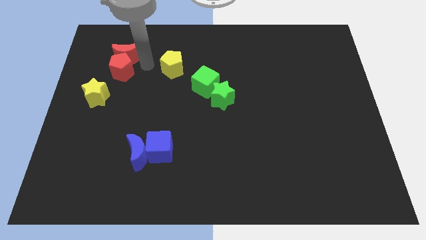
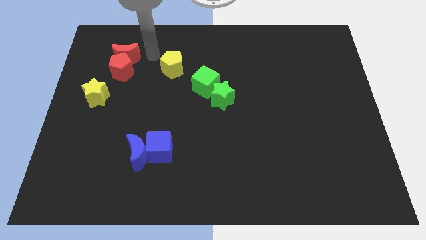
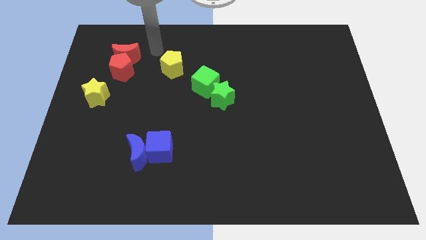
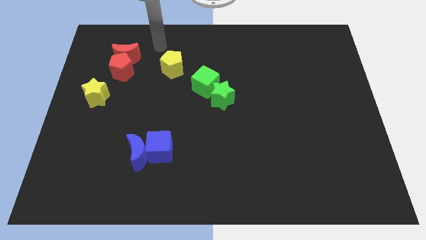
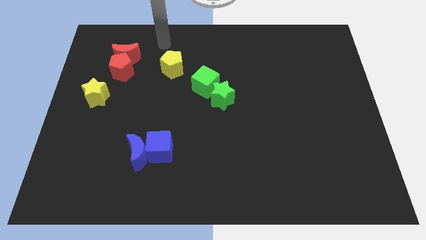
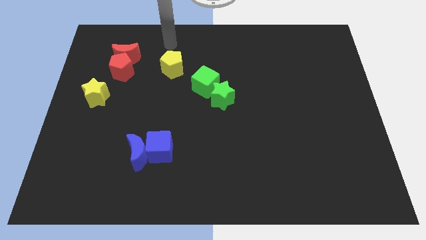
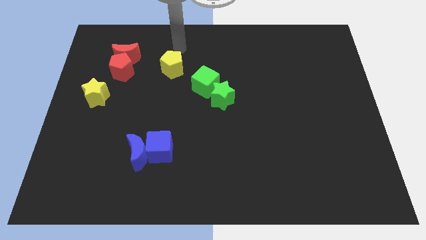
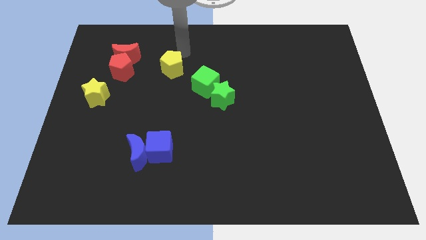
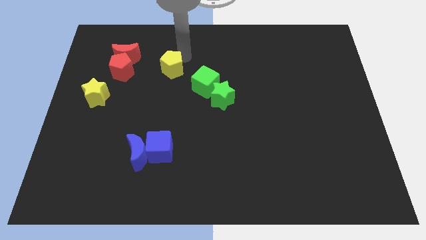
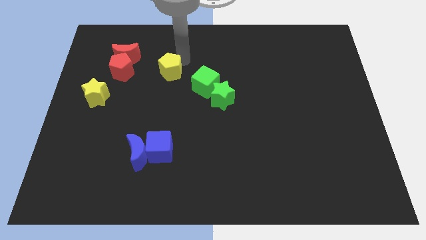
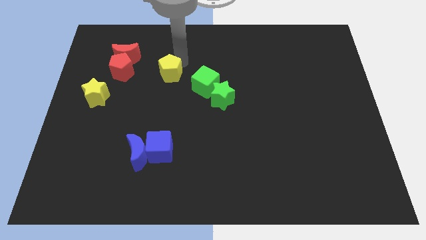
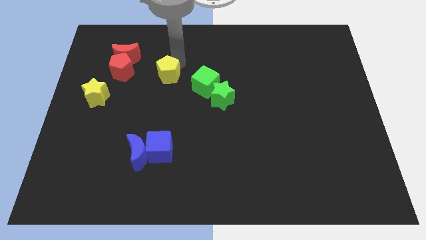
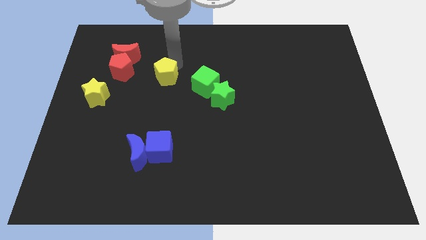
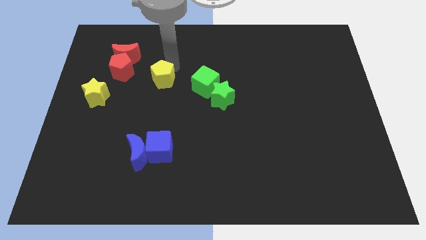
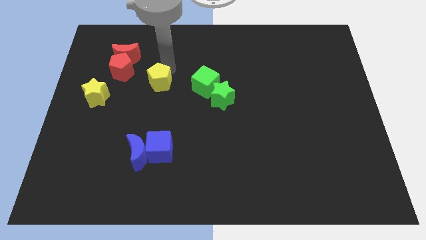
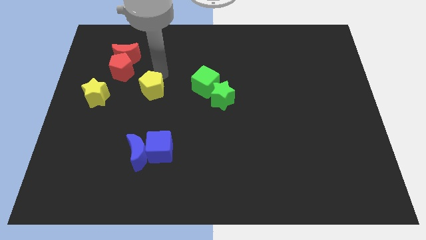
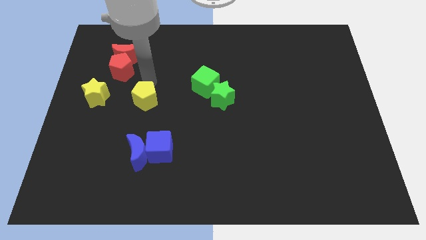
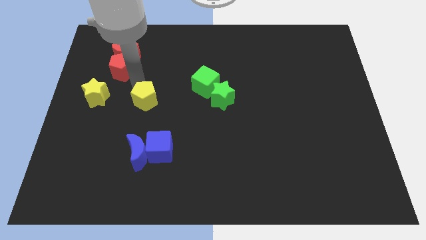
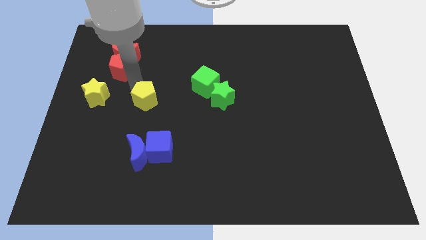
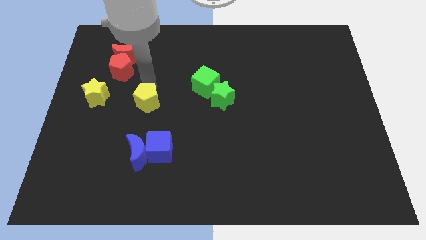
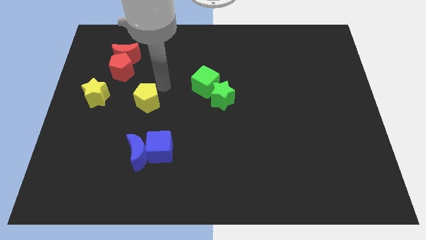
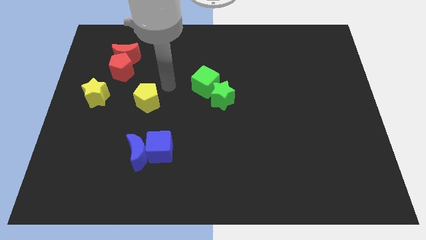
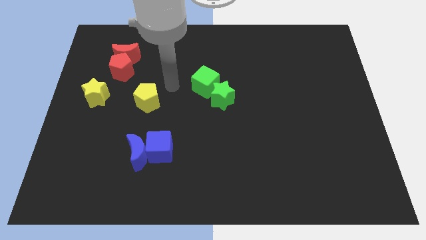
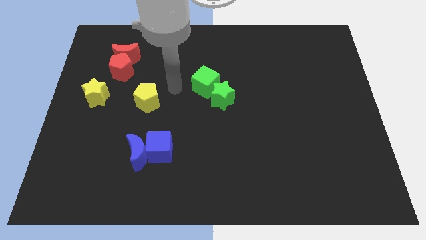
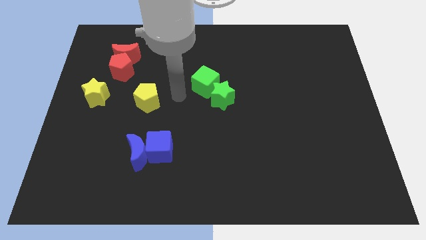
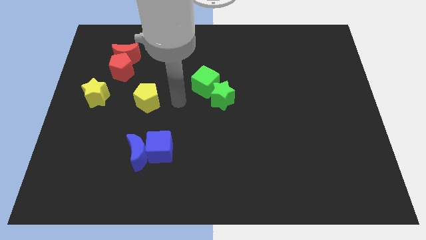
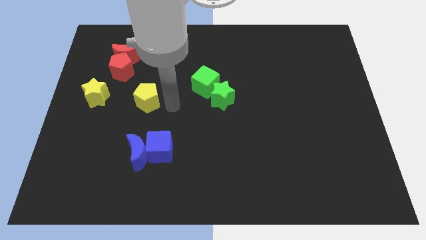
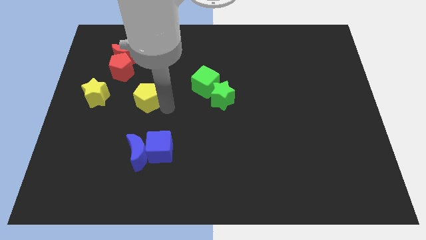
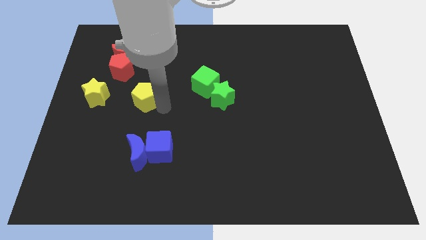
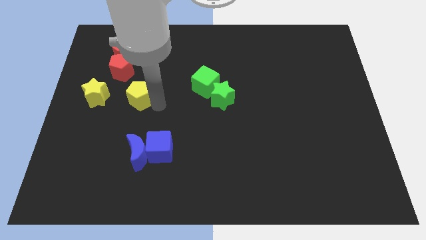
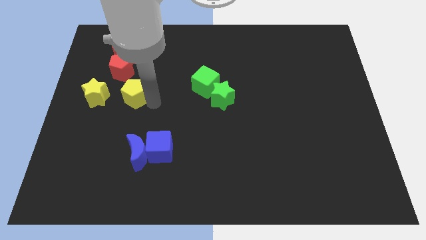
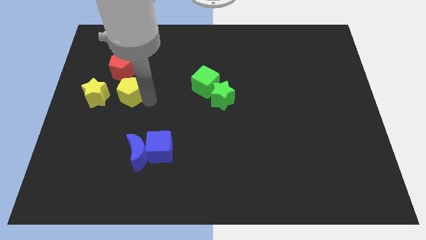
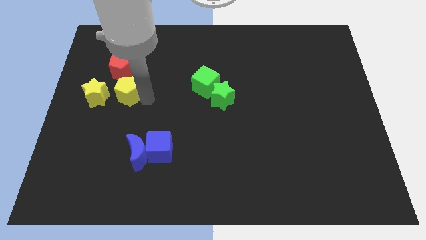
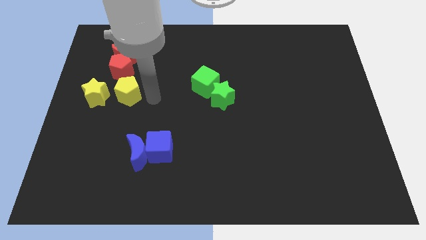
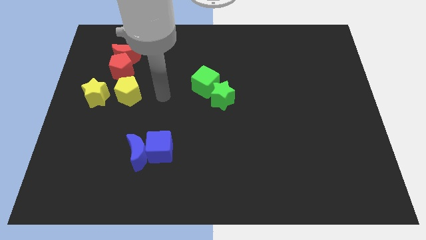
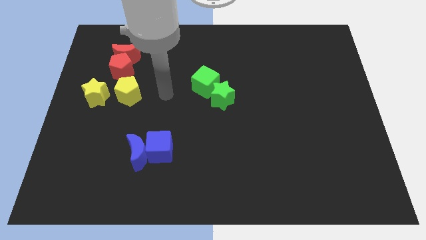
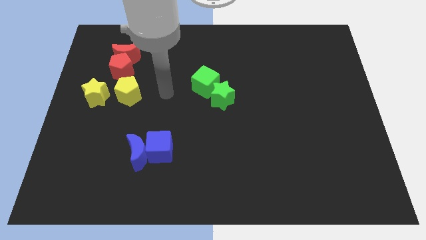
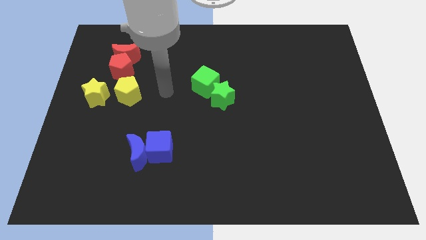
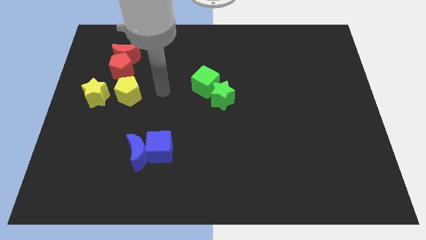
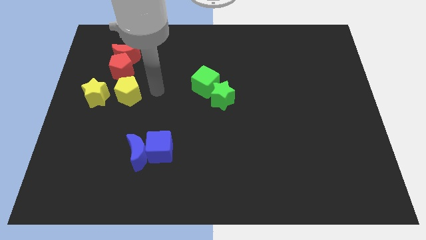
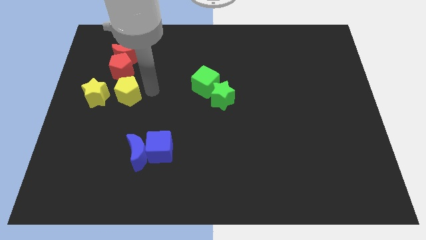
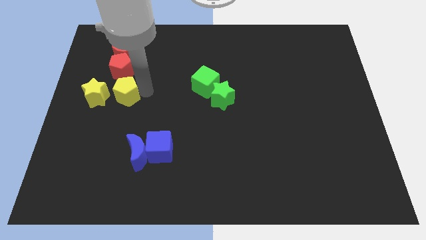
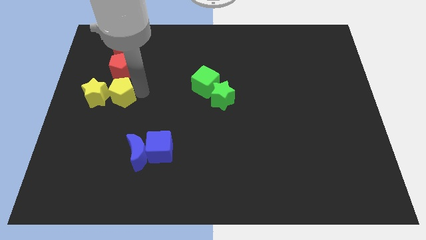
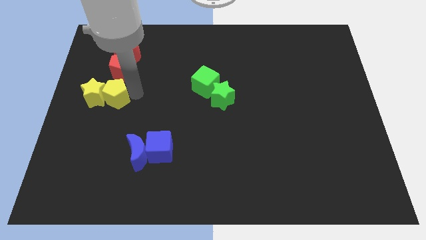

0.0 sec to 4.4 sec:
move the yellow pentagon to the right of the yellow star

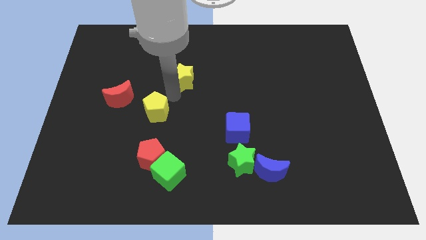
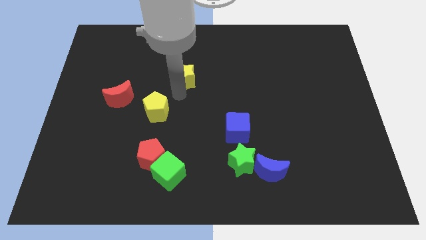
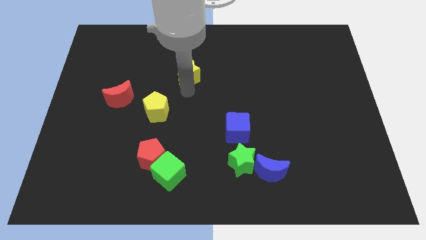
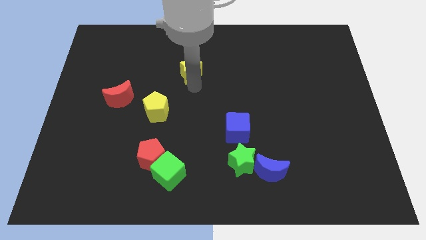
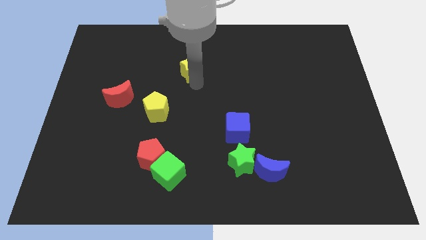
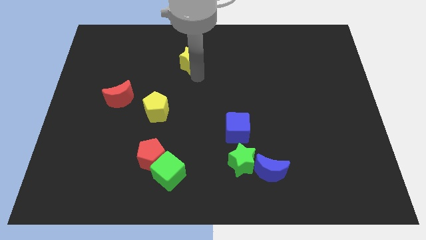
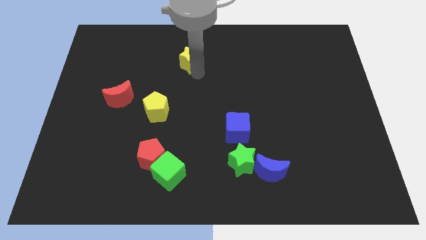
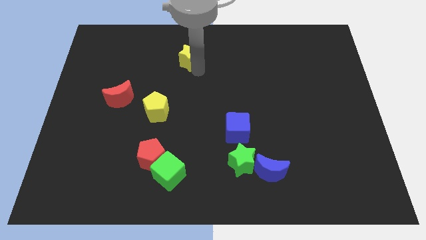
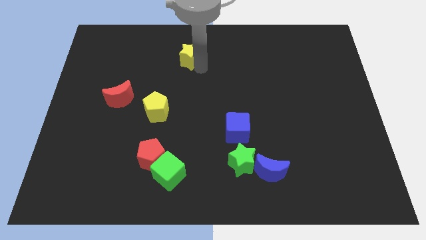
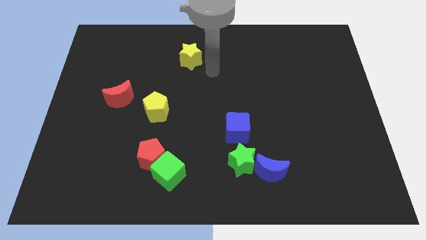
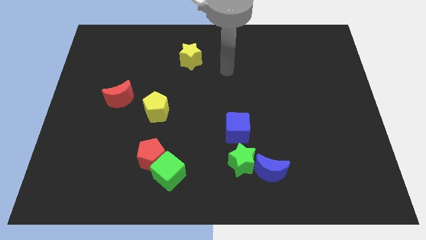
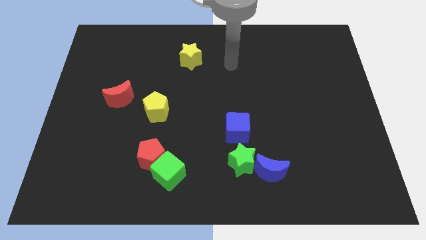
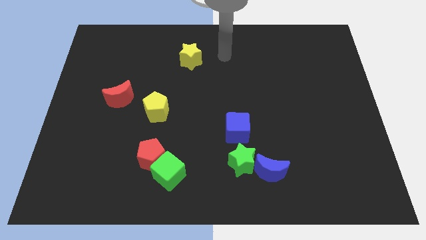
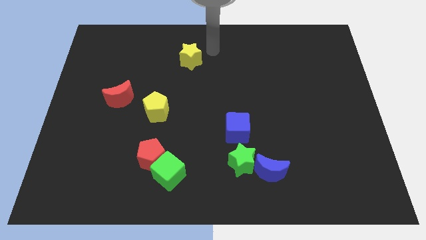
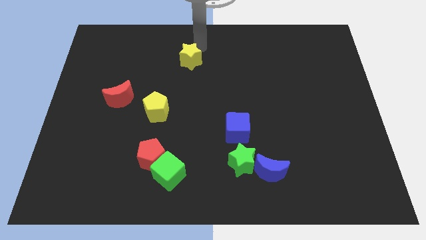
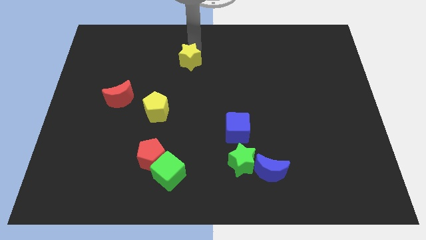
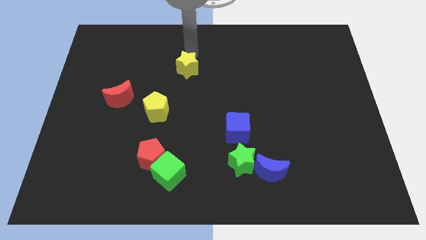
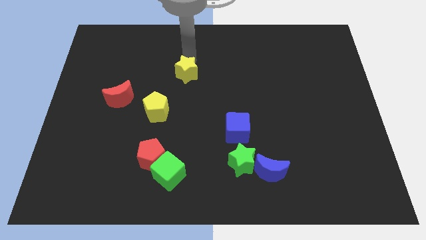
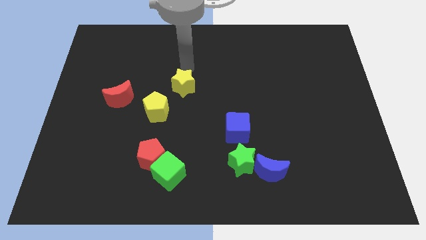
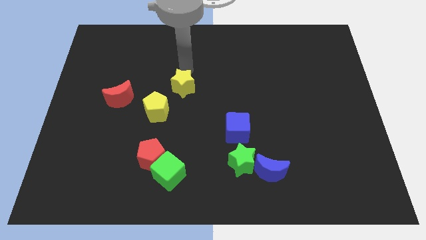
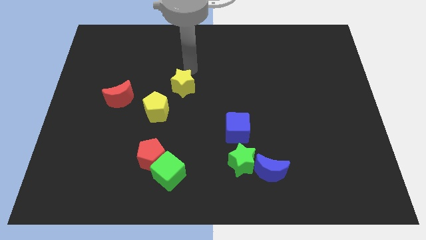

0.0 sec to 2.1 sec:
move yellow star slightly down

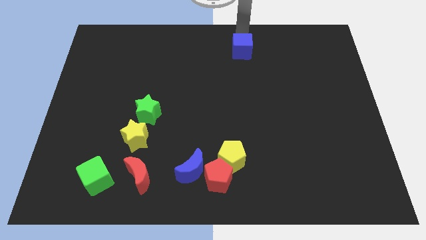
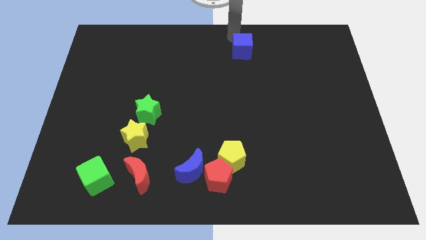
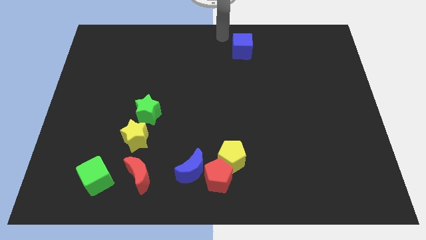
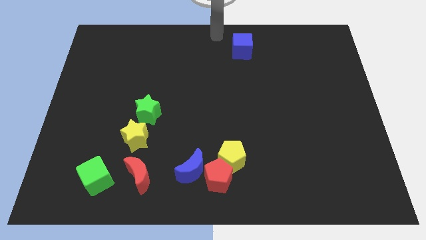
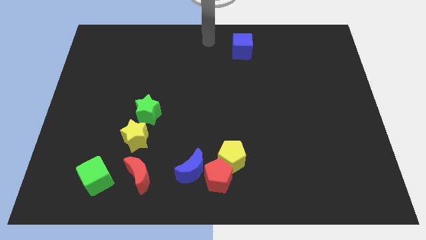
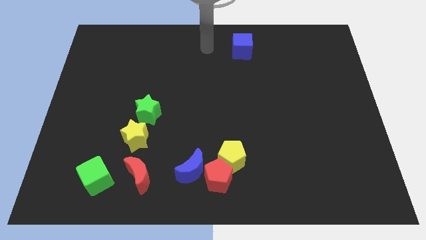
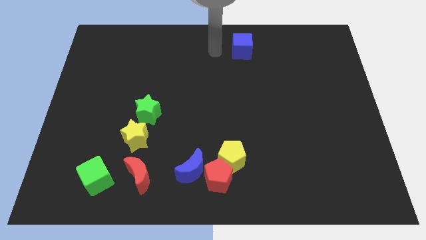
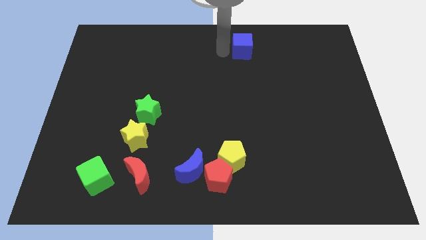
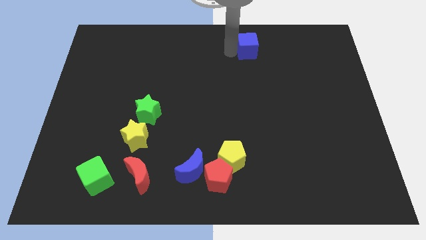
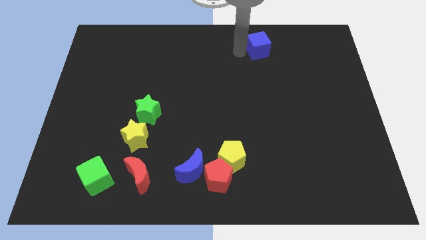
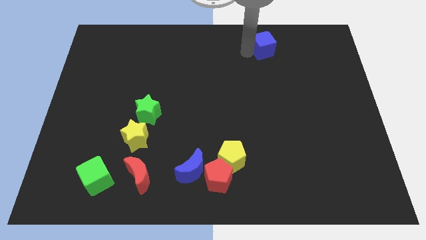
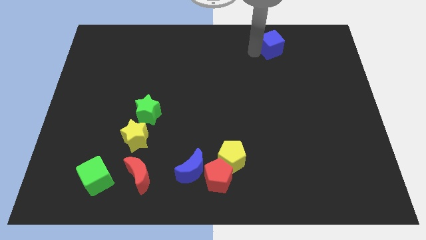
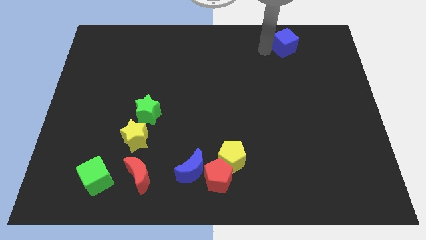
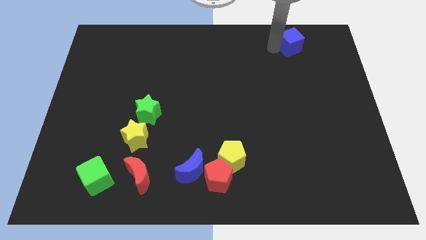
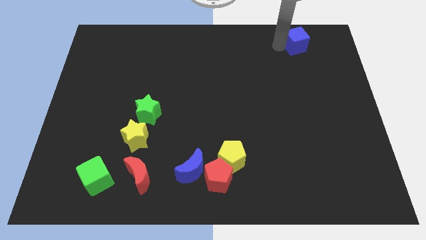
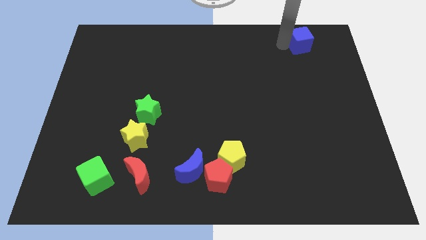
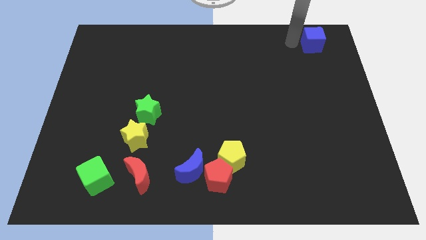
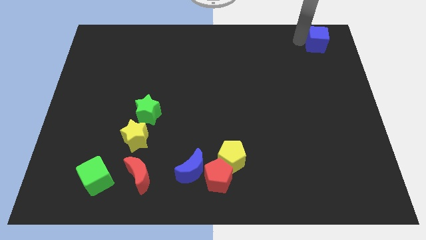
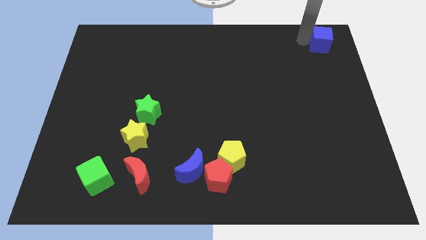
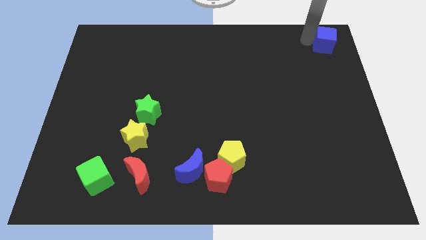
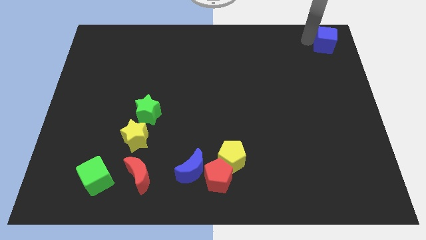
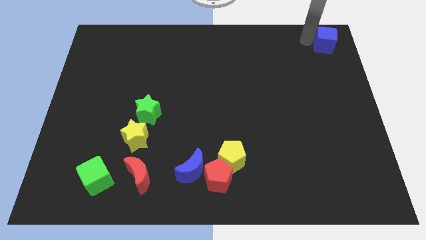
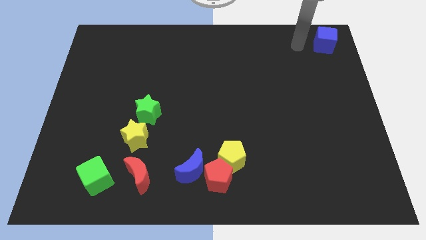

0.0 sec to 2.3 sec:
push the blue cube to the top right corner of the board

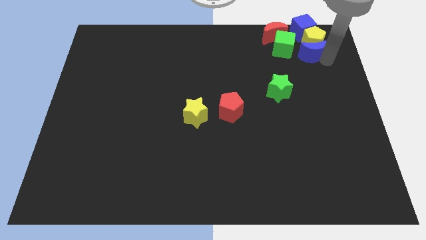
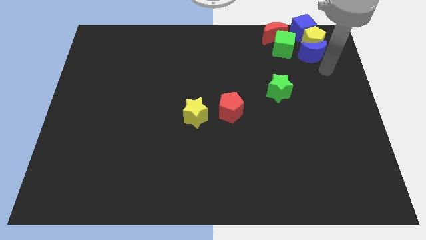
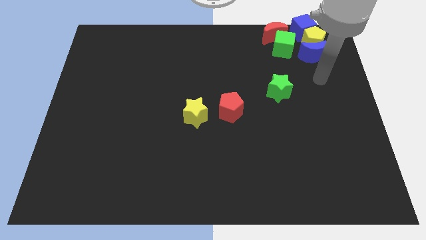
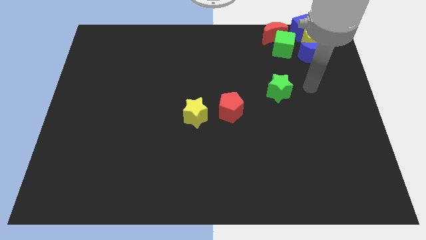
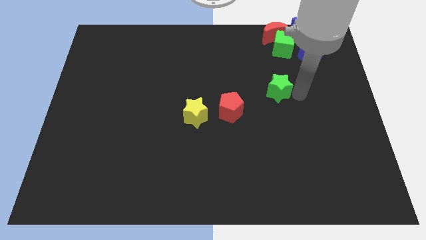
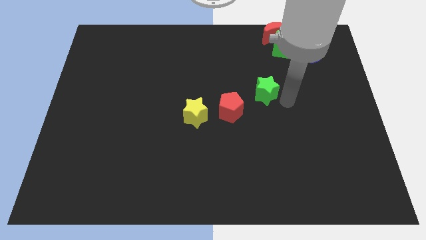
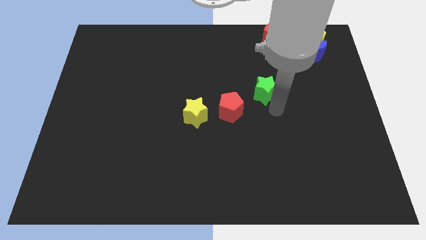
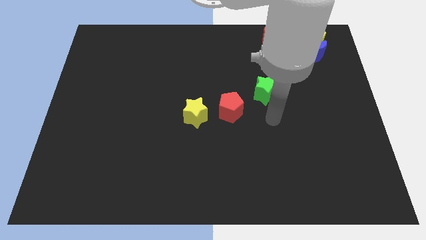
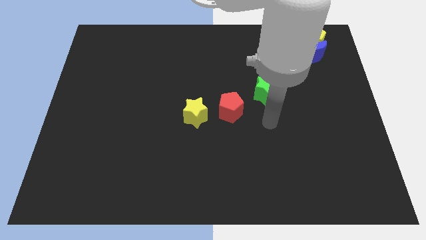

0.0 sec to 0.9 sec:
push the green star towards the red pentagon
